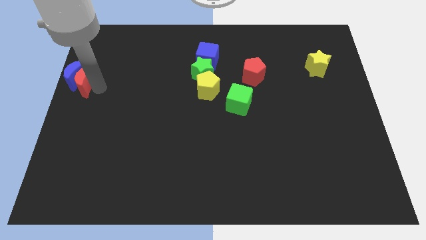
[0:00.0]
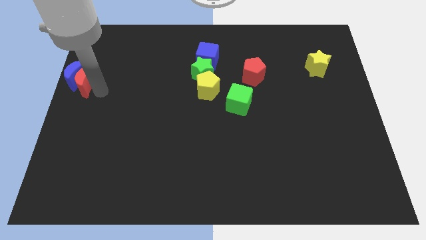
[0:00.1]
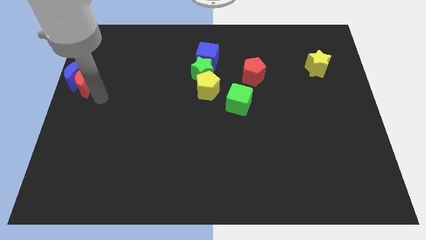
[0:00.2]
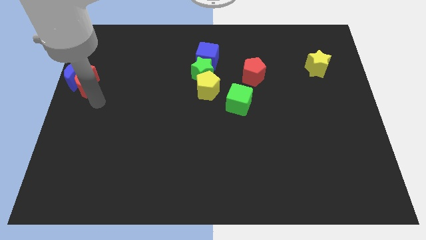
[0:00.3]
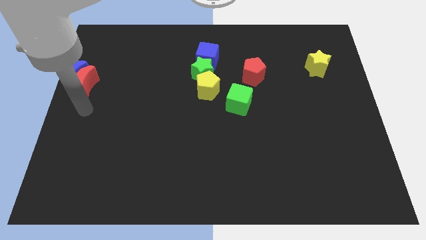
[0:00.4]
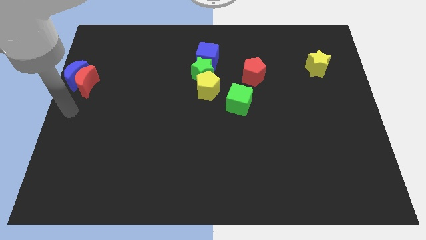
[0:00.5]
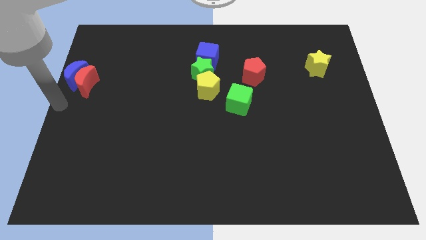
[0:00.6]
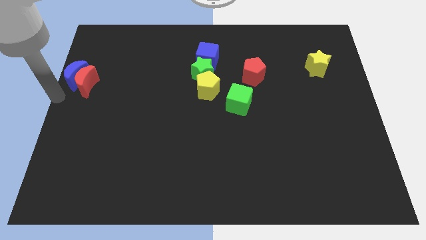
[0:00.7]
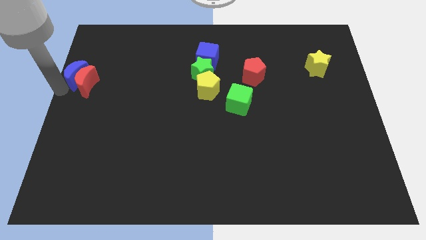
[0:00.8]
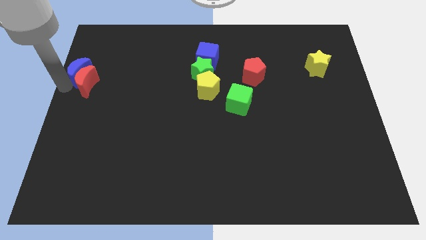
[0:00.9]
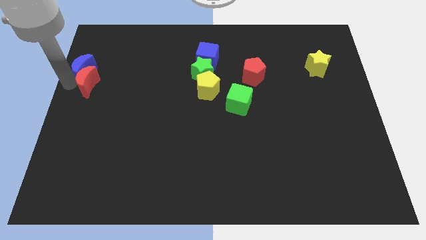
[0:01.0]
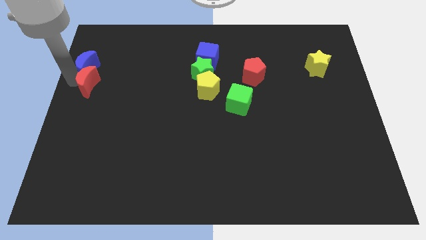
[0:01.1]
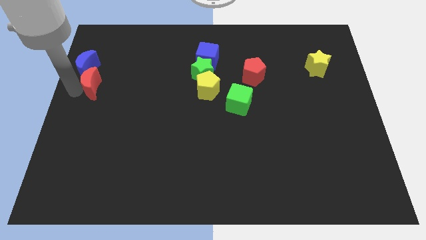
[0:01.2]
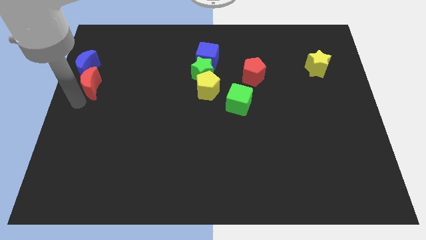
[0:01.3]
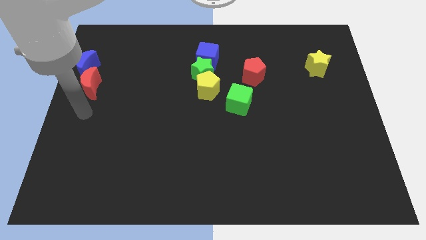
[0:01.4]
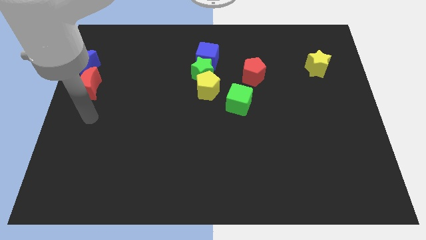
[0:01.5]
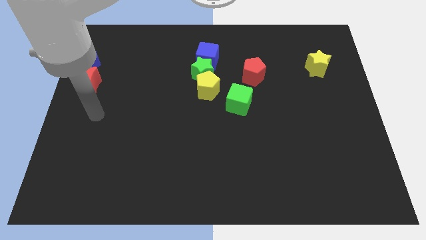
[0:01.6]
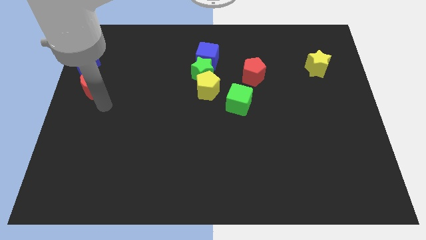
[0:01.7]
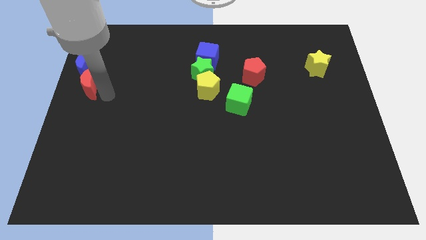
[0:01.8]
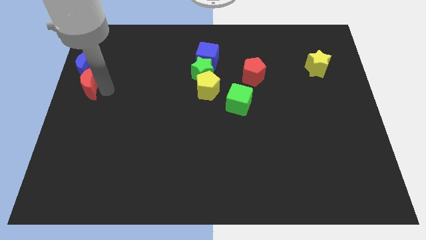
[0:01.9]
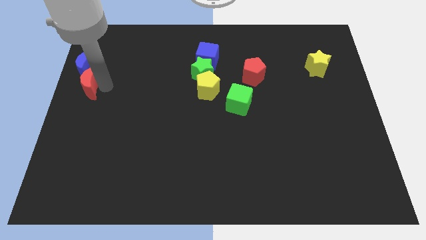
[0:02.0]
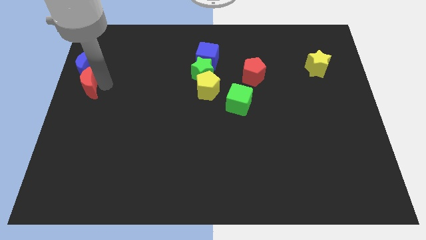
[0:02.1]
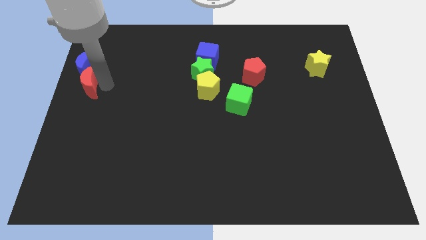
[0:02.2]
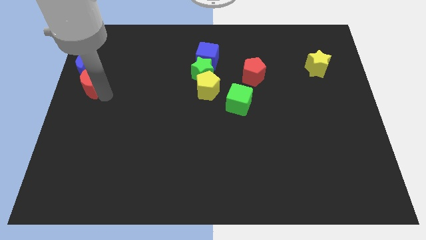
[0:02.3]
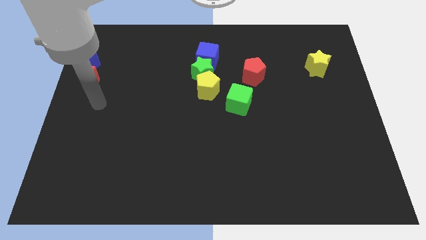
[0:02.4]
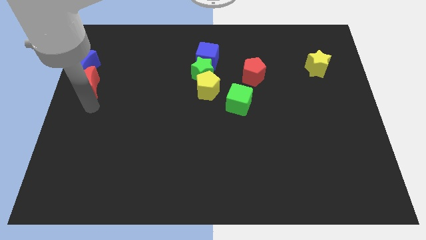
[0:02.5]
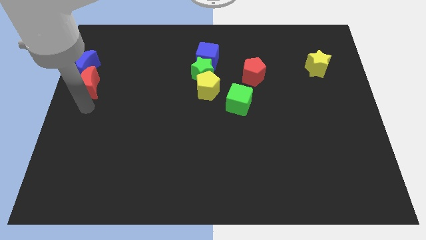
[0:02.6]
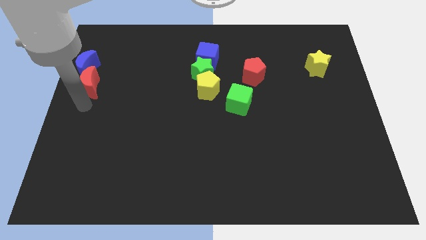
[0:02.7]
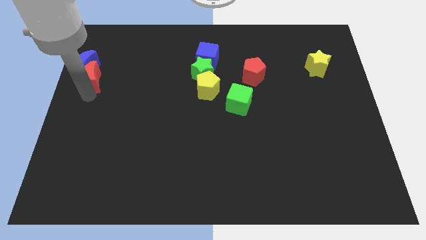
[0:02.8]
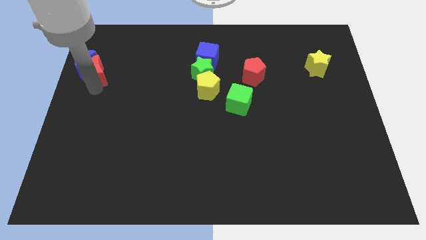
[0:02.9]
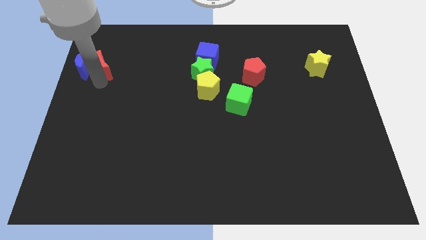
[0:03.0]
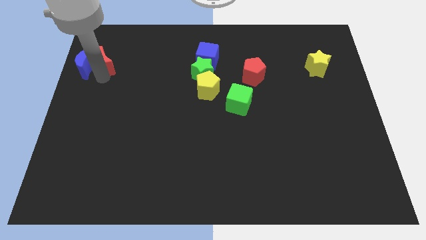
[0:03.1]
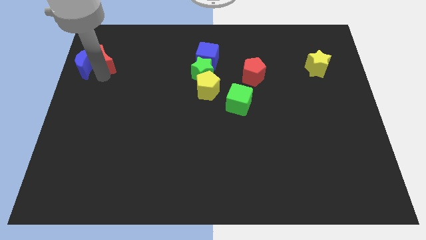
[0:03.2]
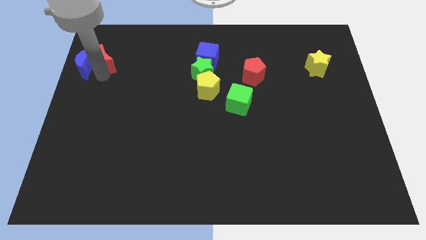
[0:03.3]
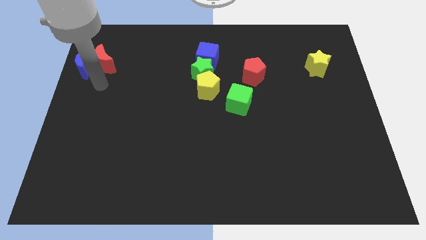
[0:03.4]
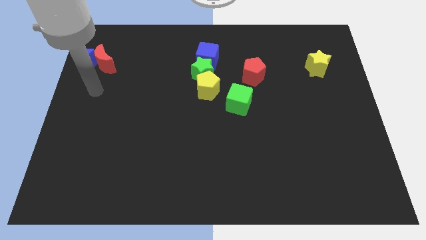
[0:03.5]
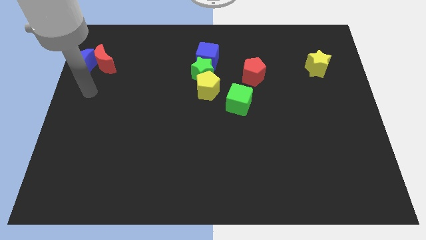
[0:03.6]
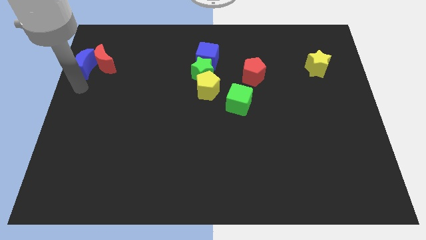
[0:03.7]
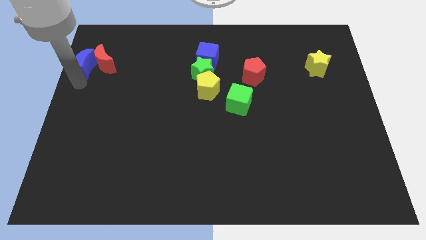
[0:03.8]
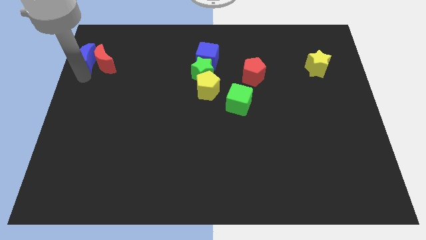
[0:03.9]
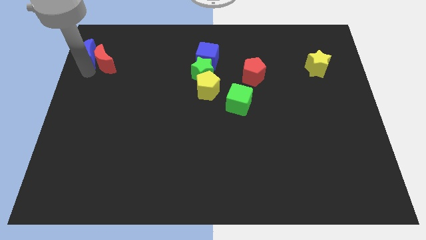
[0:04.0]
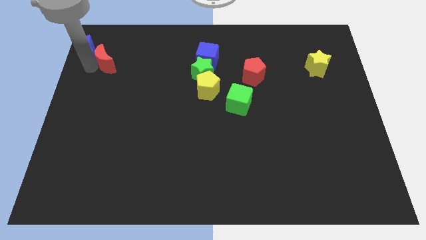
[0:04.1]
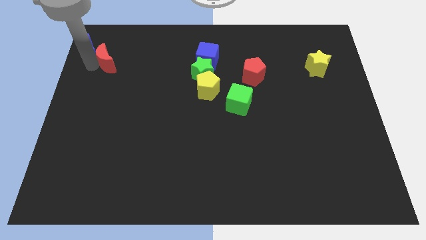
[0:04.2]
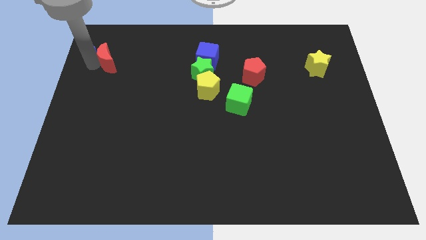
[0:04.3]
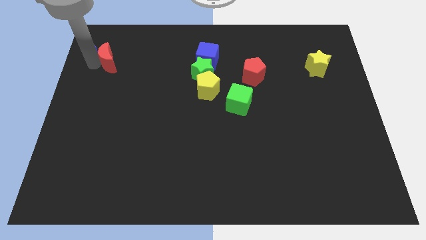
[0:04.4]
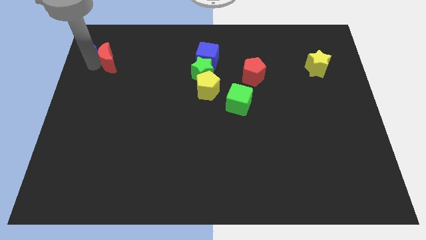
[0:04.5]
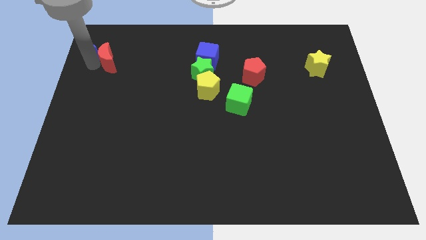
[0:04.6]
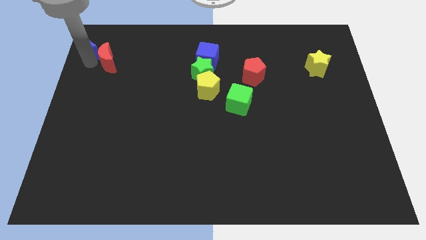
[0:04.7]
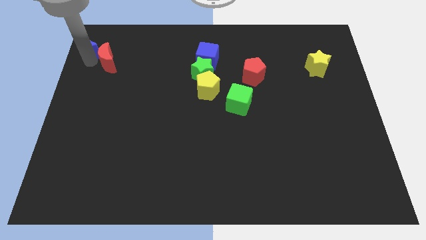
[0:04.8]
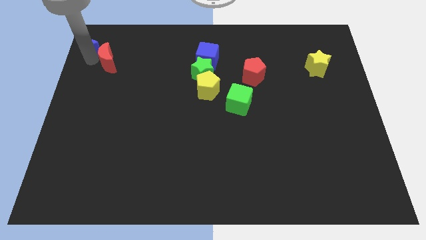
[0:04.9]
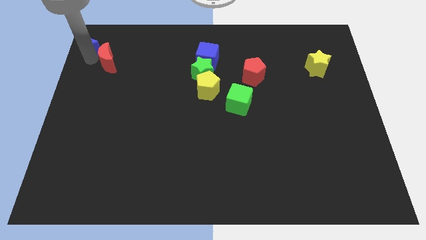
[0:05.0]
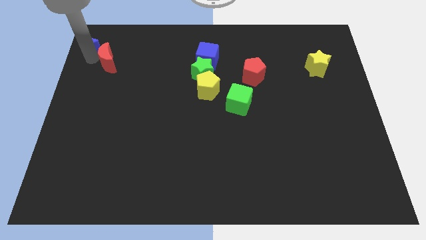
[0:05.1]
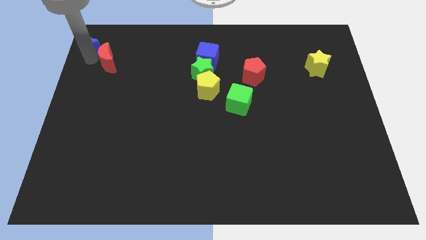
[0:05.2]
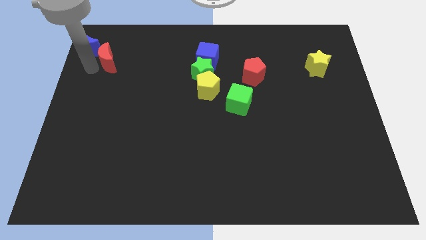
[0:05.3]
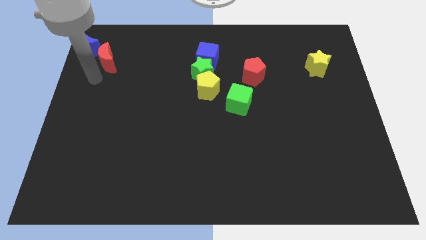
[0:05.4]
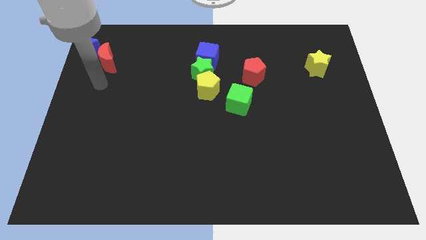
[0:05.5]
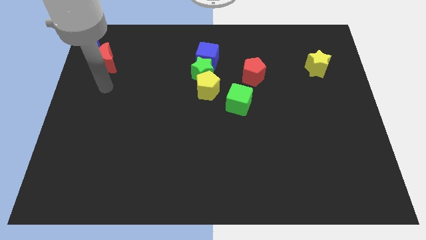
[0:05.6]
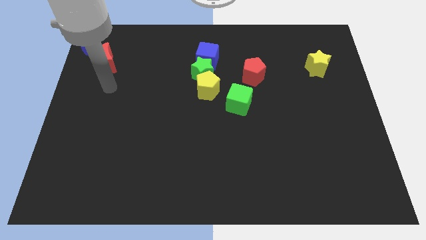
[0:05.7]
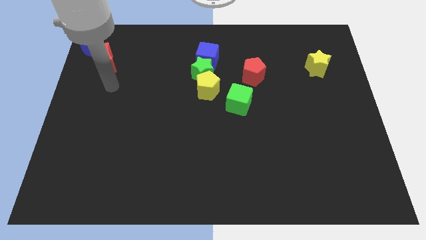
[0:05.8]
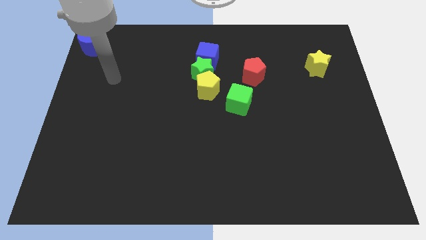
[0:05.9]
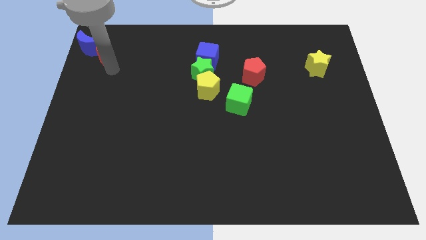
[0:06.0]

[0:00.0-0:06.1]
move the blue crescent and red crescent to the top left of the board

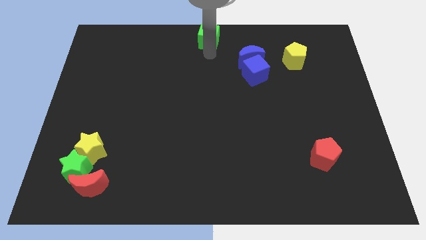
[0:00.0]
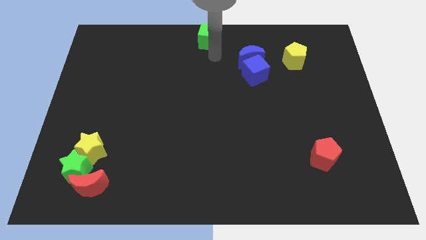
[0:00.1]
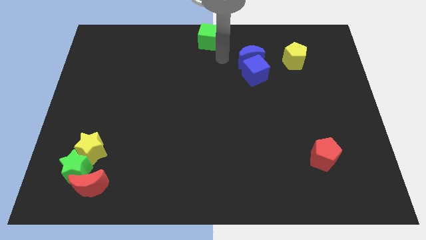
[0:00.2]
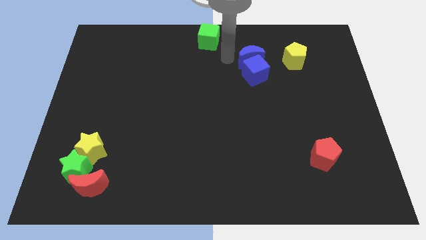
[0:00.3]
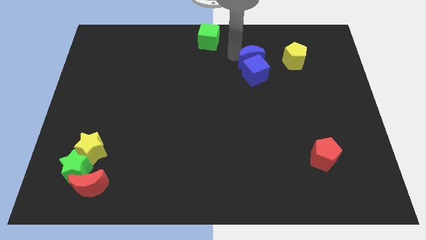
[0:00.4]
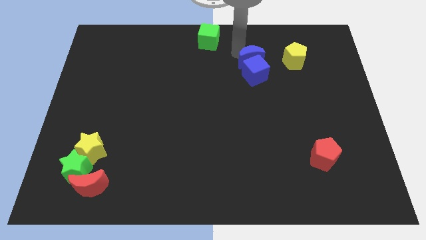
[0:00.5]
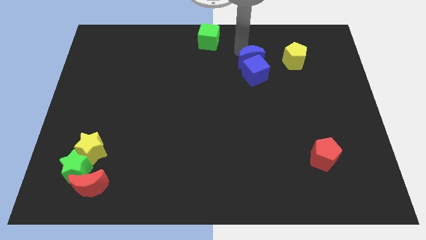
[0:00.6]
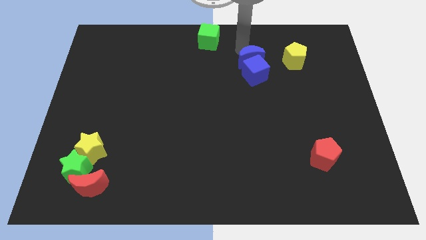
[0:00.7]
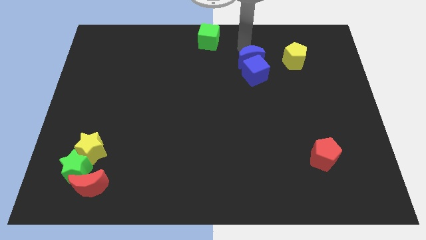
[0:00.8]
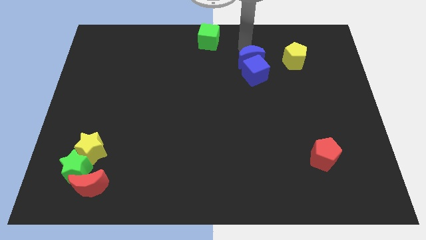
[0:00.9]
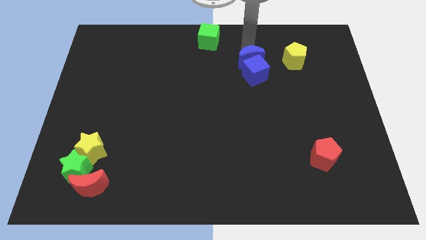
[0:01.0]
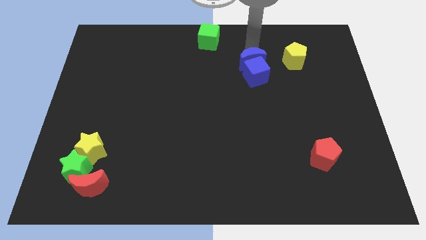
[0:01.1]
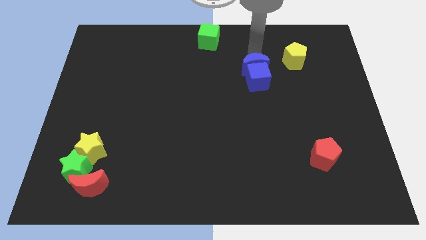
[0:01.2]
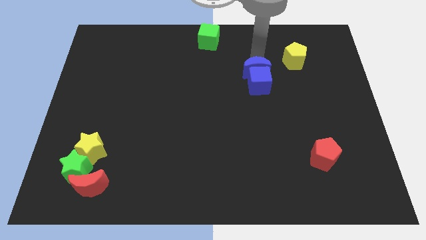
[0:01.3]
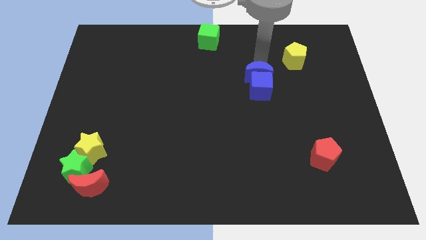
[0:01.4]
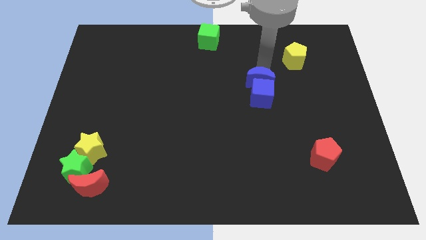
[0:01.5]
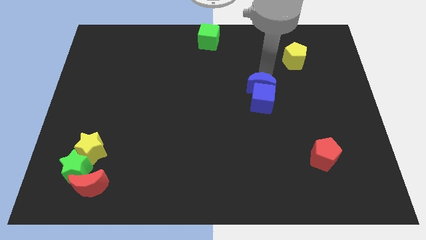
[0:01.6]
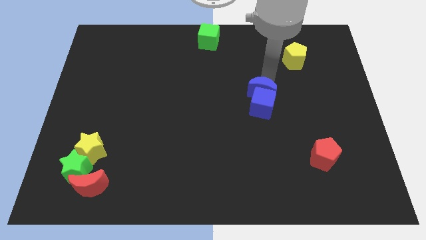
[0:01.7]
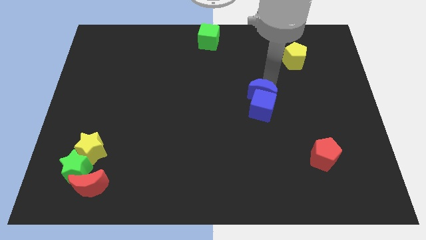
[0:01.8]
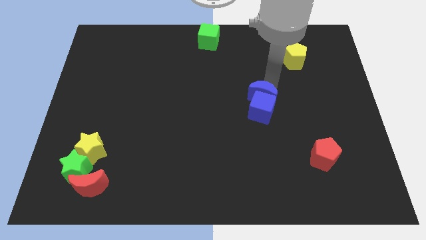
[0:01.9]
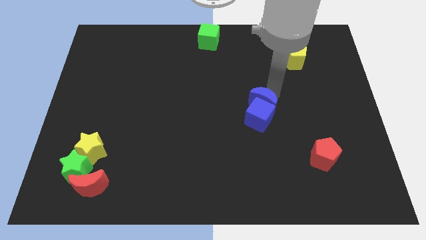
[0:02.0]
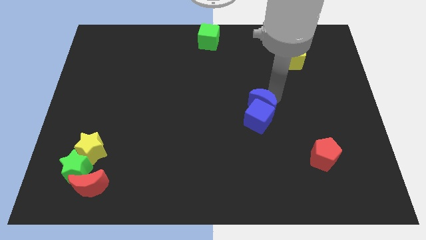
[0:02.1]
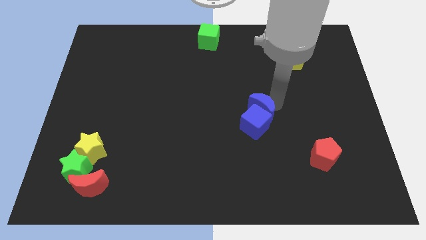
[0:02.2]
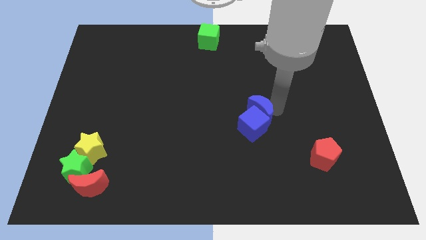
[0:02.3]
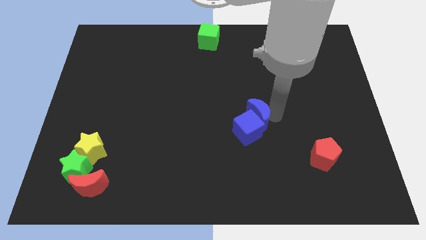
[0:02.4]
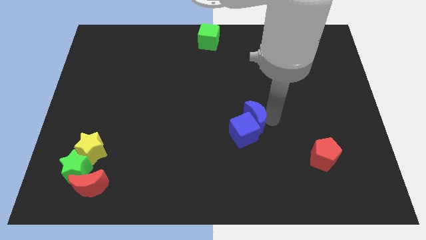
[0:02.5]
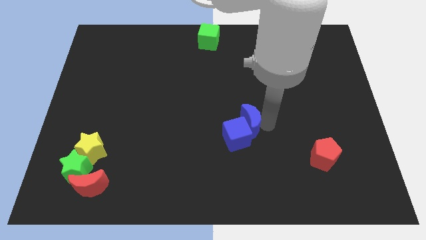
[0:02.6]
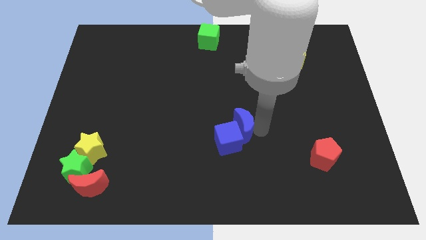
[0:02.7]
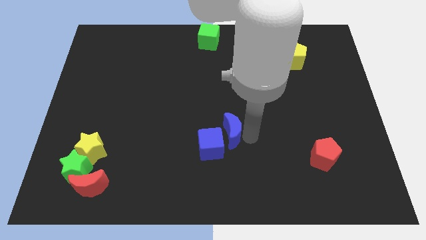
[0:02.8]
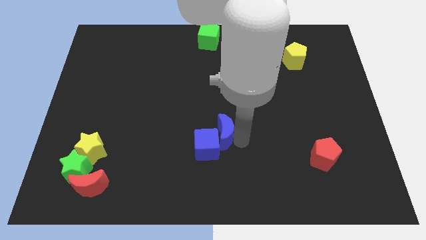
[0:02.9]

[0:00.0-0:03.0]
place the blue blocks in between the yellow star and red pentagon
